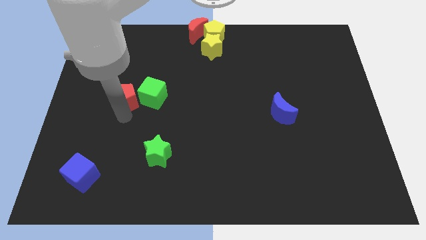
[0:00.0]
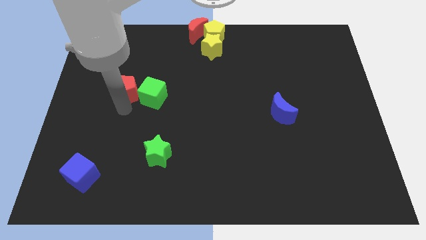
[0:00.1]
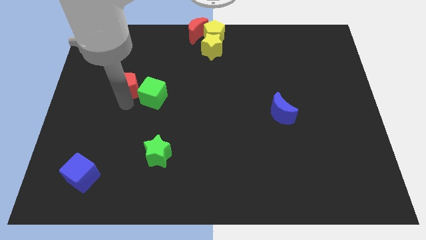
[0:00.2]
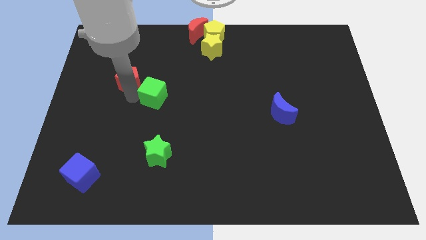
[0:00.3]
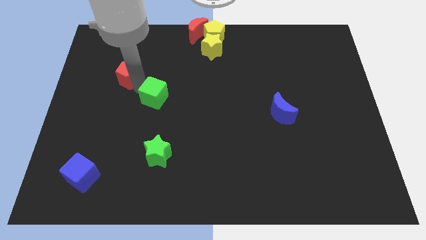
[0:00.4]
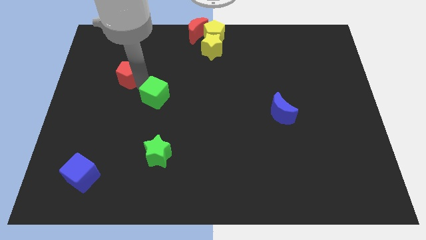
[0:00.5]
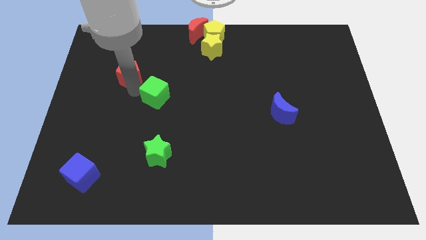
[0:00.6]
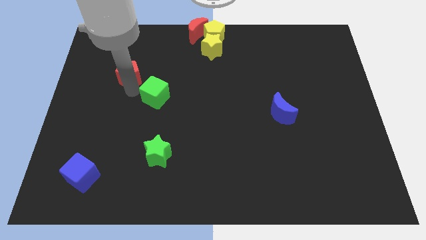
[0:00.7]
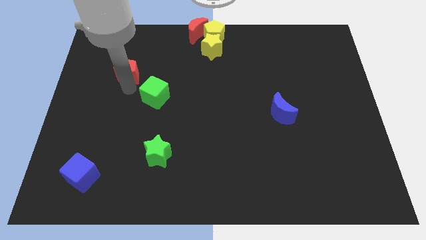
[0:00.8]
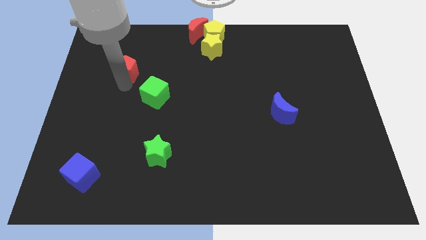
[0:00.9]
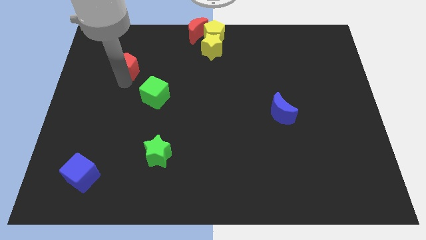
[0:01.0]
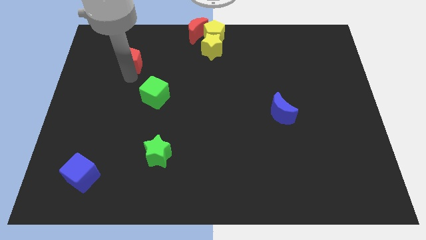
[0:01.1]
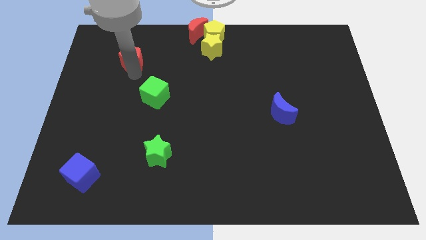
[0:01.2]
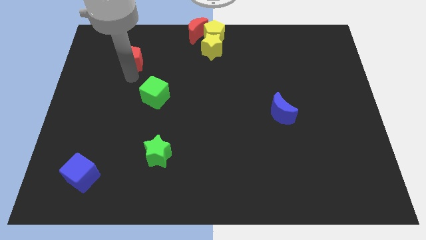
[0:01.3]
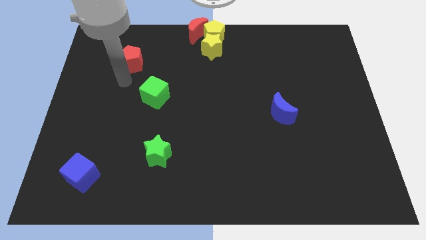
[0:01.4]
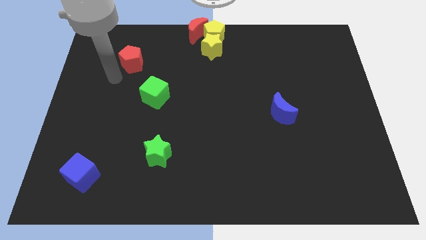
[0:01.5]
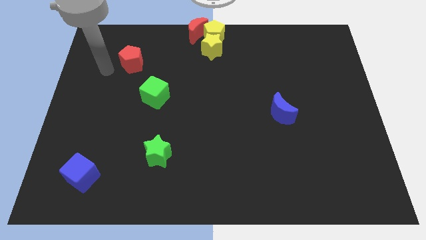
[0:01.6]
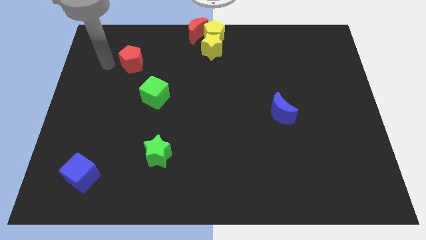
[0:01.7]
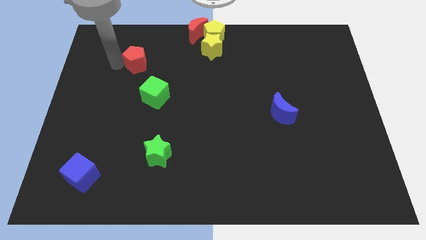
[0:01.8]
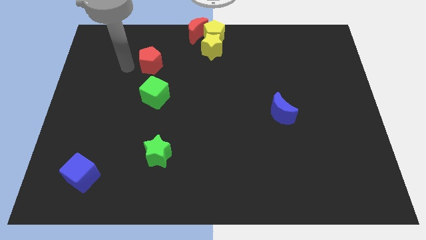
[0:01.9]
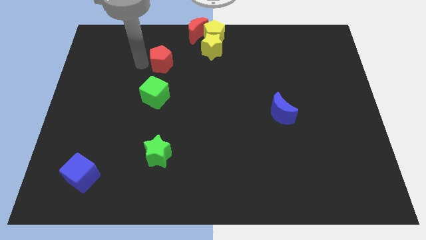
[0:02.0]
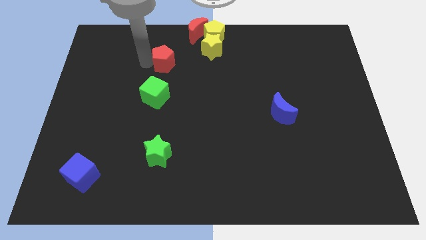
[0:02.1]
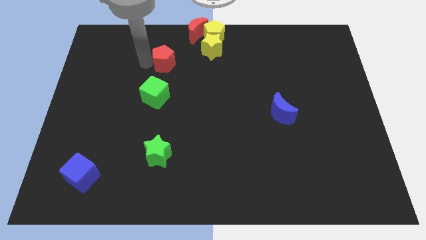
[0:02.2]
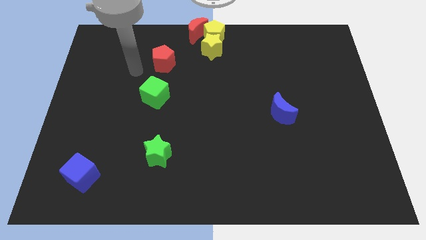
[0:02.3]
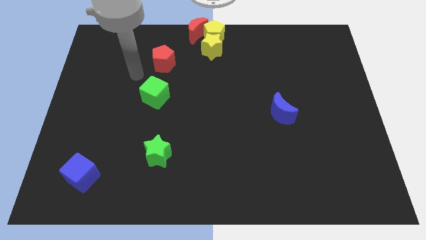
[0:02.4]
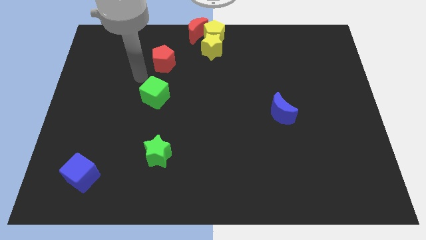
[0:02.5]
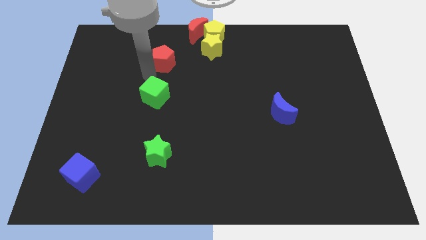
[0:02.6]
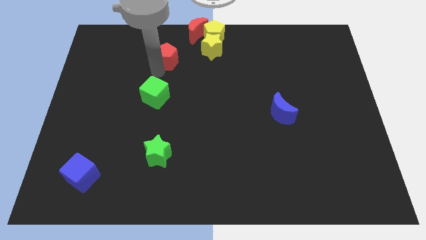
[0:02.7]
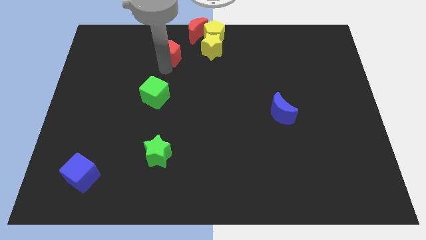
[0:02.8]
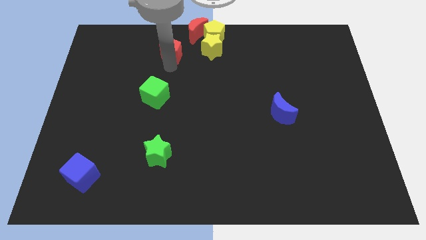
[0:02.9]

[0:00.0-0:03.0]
place the red pentagon above the green cube

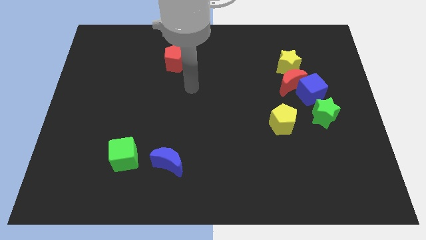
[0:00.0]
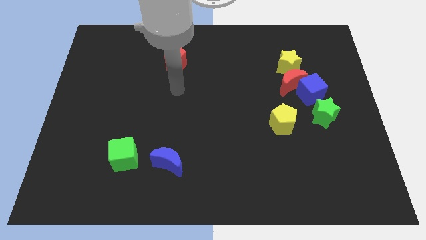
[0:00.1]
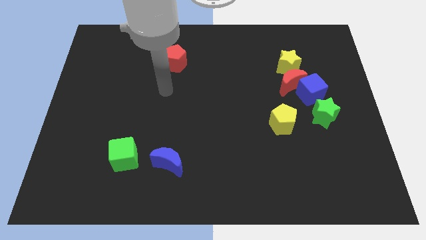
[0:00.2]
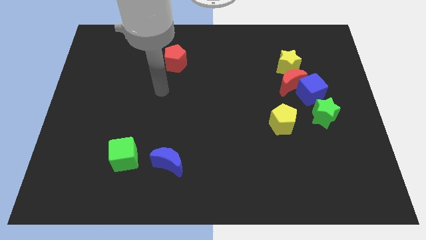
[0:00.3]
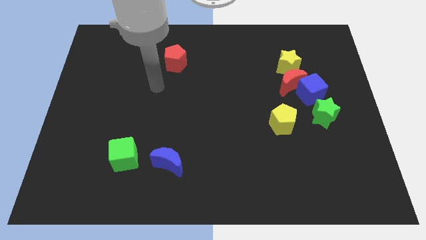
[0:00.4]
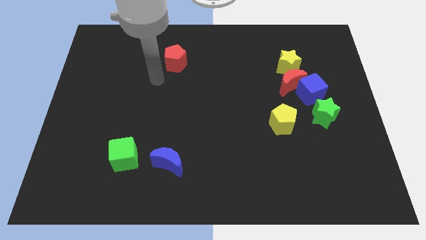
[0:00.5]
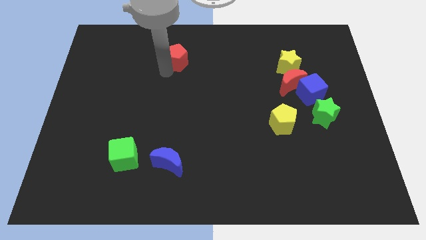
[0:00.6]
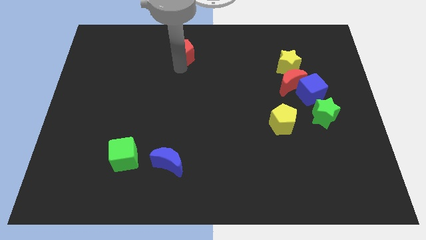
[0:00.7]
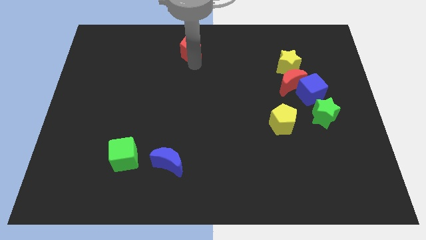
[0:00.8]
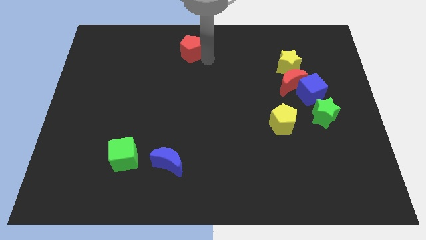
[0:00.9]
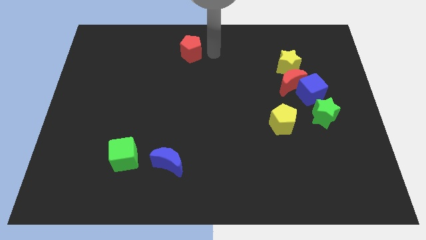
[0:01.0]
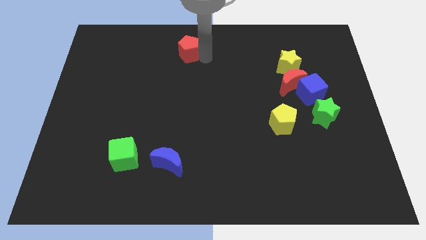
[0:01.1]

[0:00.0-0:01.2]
tap the bottom of red pentagon

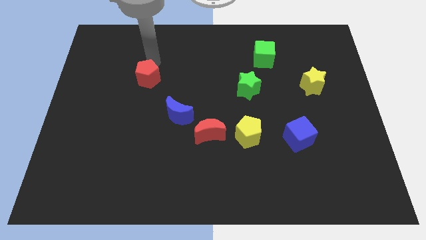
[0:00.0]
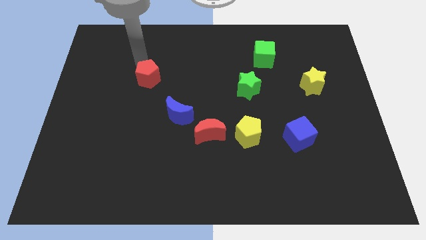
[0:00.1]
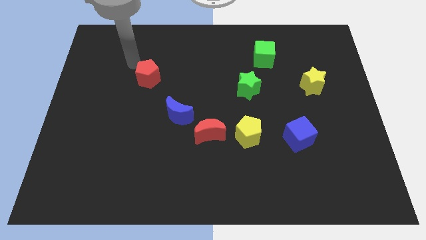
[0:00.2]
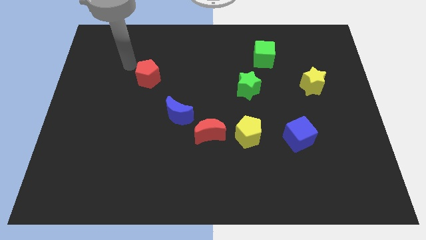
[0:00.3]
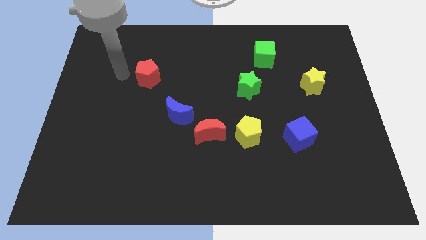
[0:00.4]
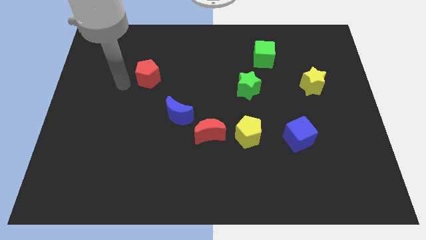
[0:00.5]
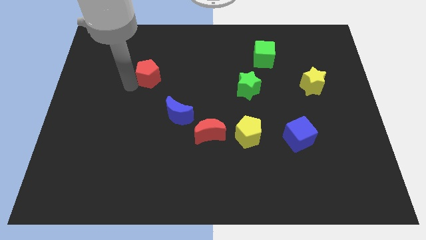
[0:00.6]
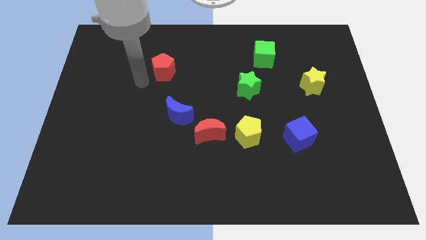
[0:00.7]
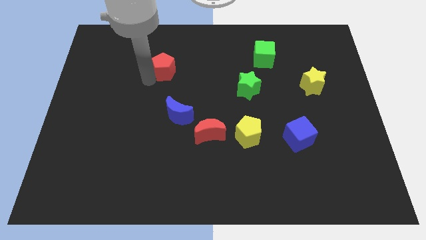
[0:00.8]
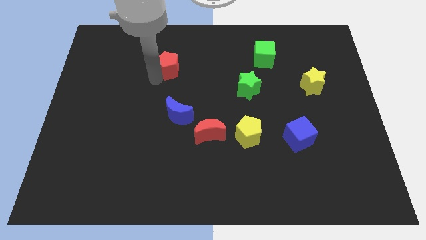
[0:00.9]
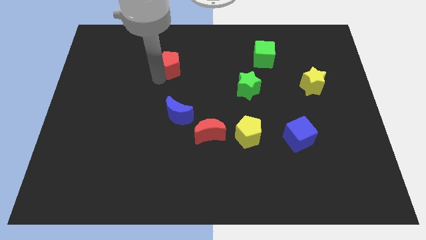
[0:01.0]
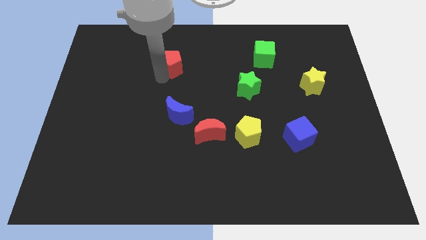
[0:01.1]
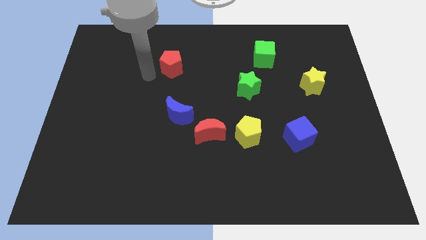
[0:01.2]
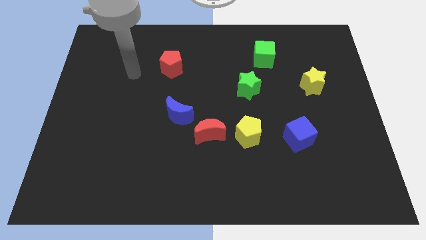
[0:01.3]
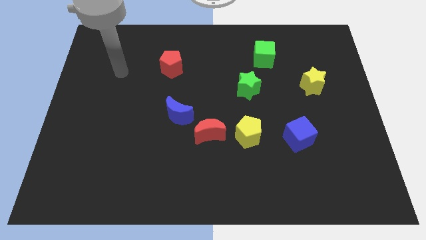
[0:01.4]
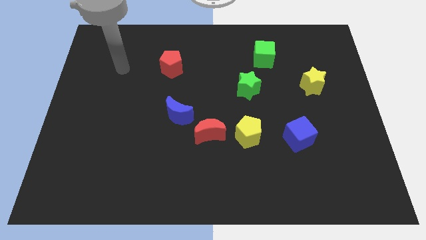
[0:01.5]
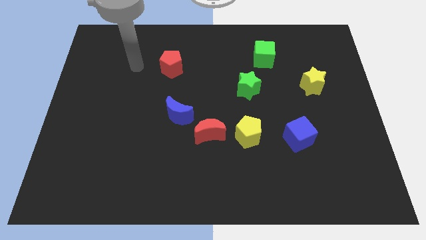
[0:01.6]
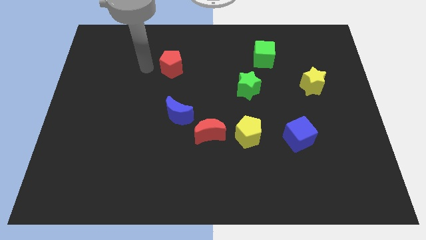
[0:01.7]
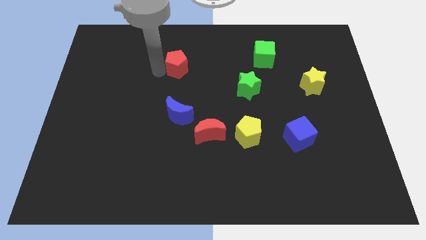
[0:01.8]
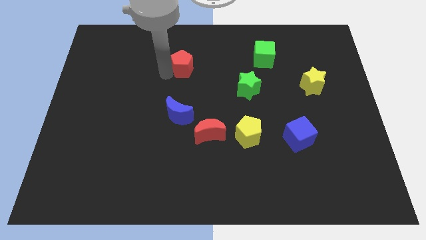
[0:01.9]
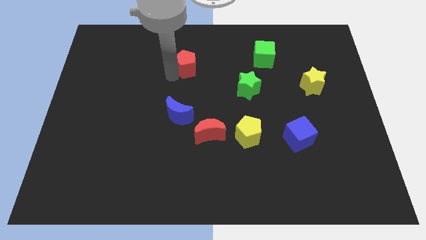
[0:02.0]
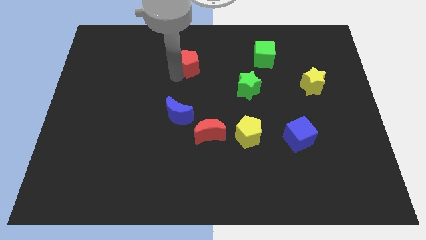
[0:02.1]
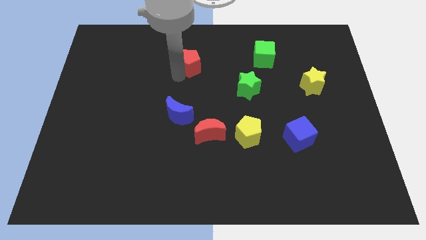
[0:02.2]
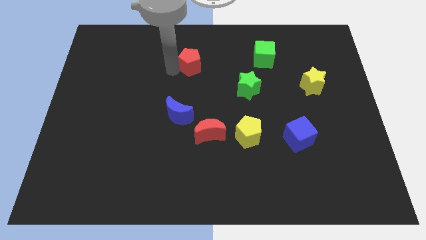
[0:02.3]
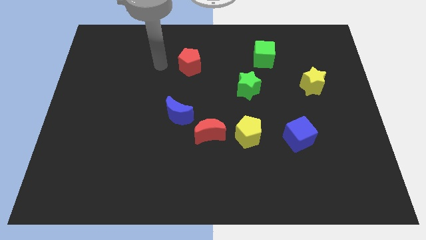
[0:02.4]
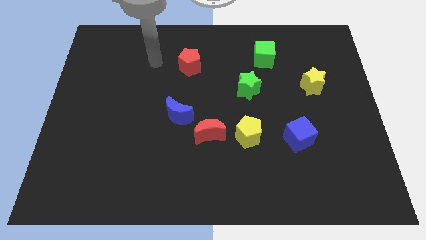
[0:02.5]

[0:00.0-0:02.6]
put the red pentagon vertically above the blue crescent

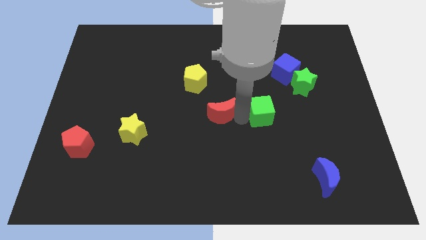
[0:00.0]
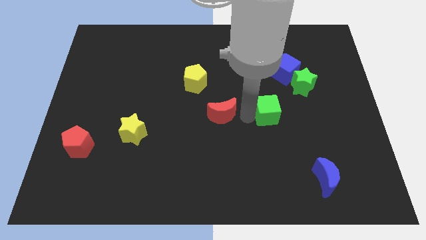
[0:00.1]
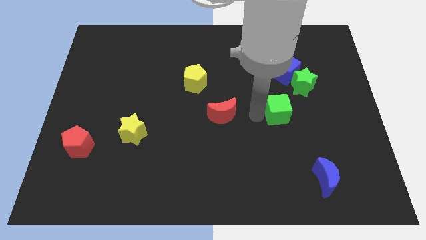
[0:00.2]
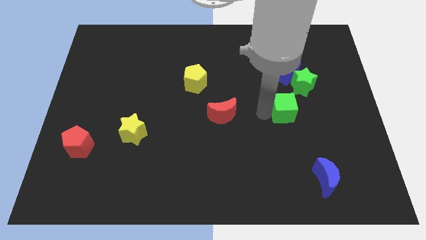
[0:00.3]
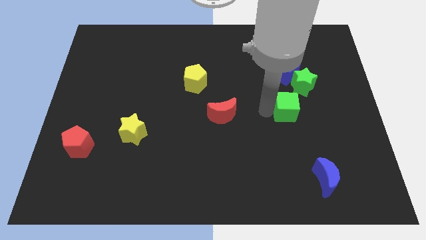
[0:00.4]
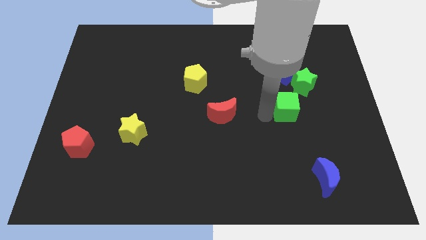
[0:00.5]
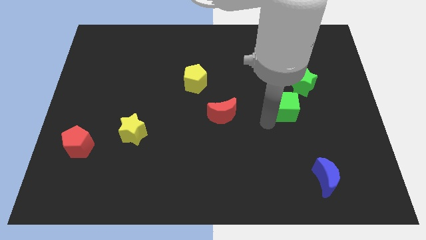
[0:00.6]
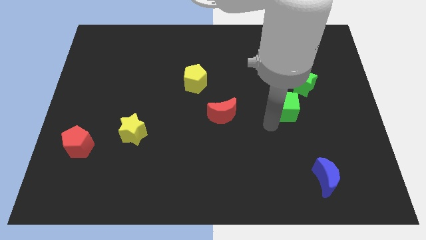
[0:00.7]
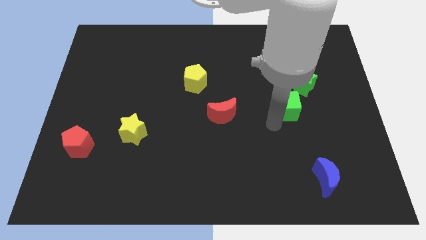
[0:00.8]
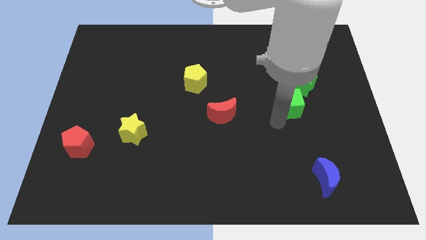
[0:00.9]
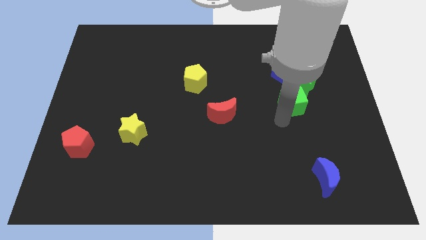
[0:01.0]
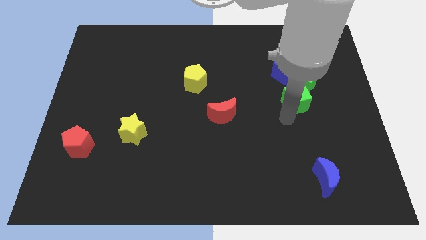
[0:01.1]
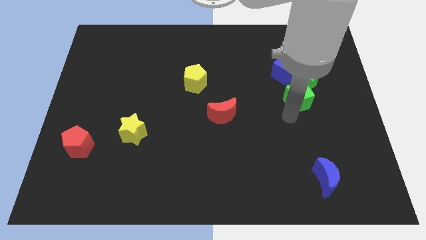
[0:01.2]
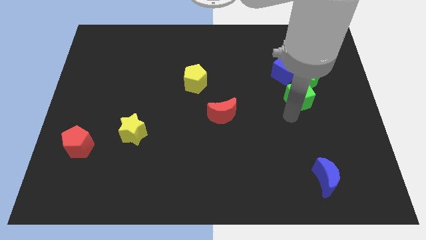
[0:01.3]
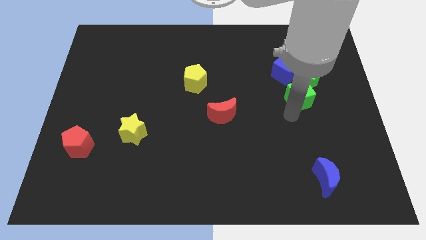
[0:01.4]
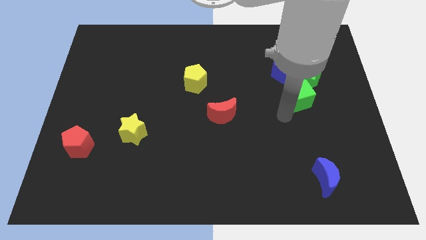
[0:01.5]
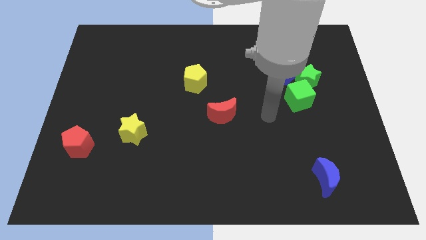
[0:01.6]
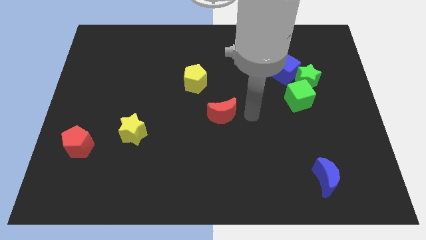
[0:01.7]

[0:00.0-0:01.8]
push the green cube into the green star

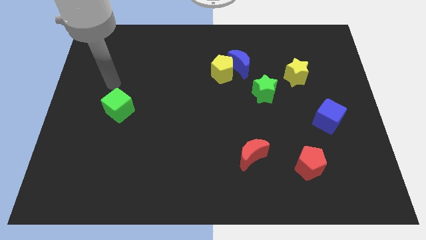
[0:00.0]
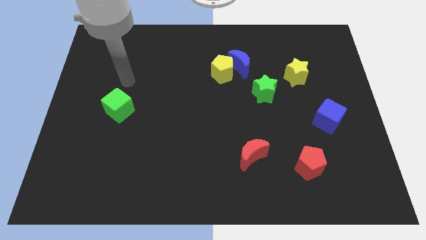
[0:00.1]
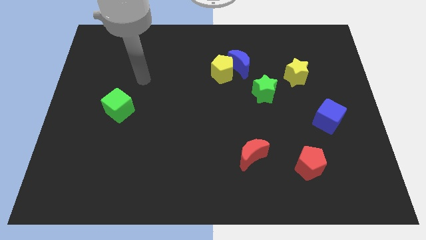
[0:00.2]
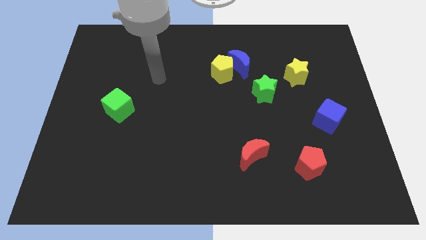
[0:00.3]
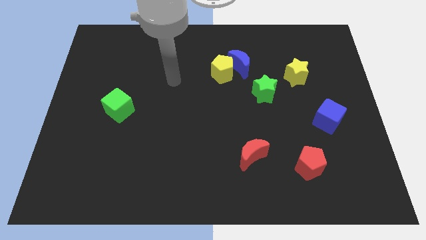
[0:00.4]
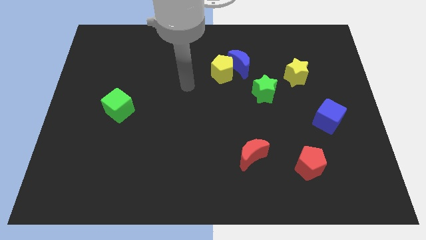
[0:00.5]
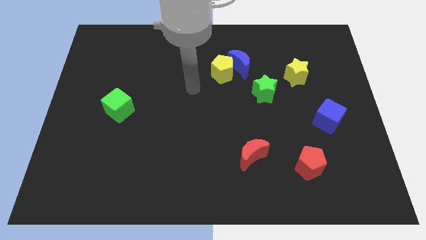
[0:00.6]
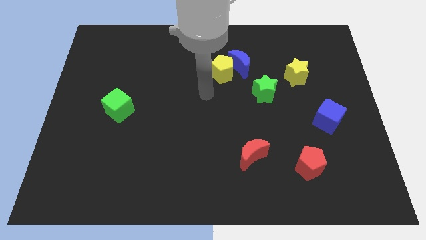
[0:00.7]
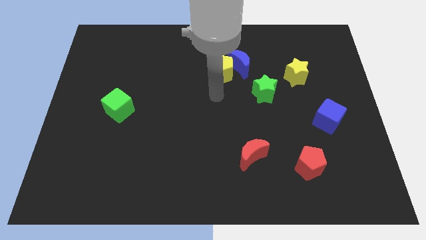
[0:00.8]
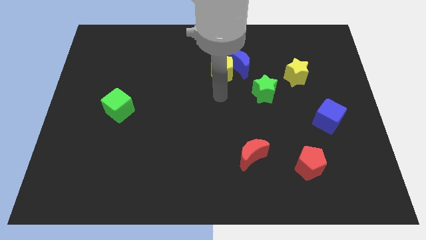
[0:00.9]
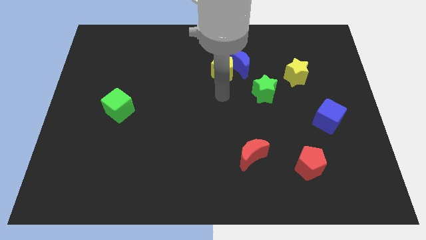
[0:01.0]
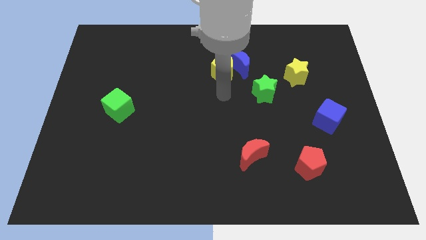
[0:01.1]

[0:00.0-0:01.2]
move your arm to the bottom of the yellow pentagon
